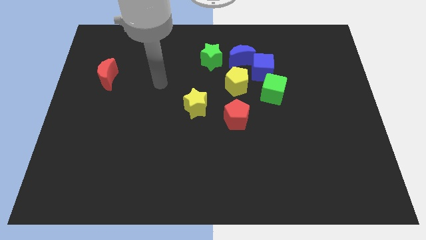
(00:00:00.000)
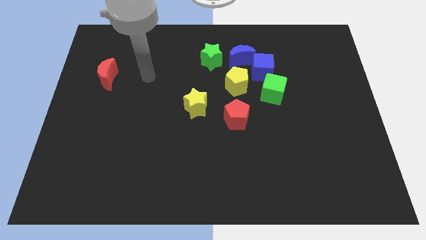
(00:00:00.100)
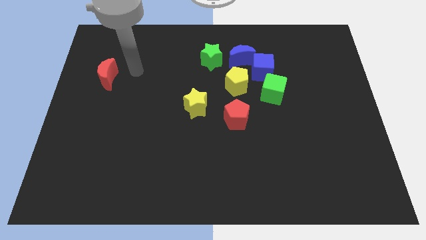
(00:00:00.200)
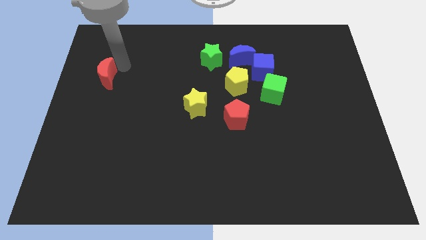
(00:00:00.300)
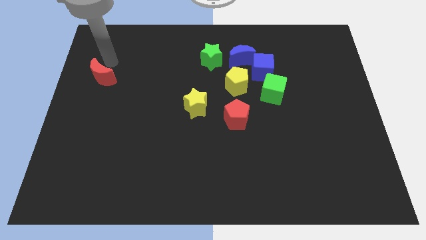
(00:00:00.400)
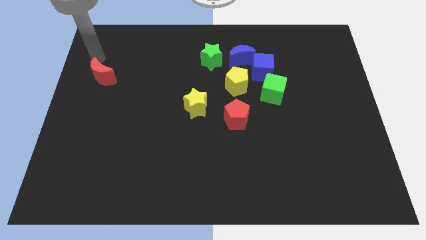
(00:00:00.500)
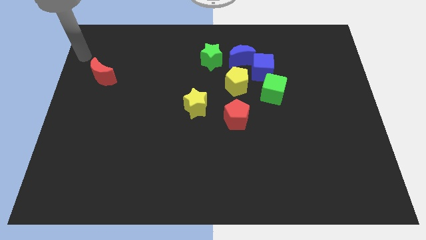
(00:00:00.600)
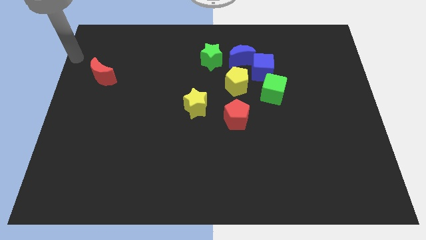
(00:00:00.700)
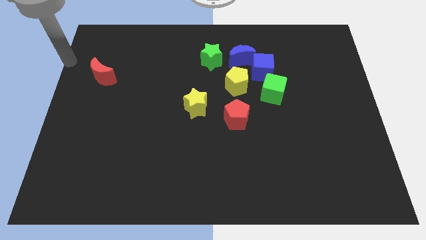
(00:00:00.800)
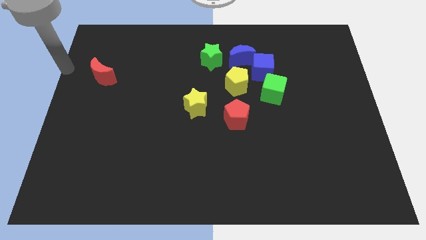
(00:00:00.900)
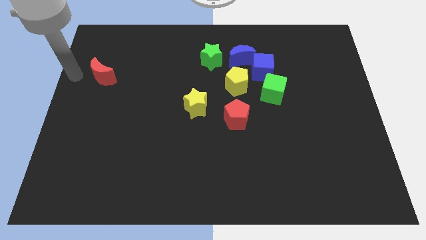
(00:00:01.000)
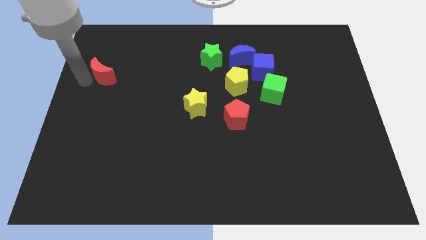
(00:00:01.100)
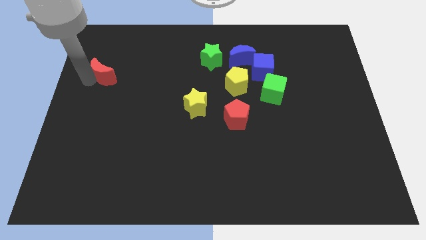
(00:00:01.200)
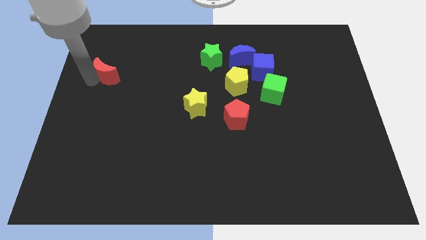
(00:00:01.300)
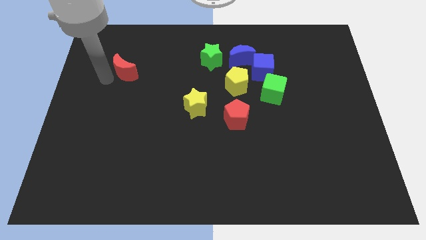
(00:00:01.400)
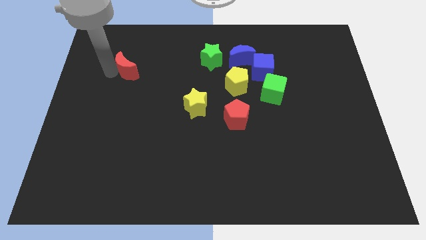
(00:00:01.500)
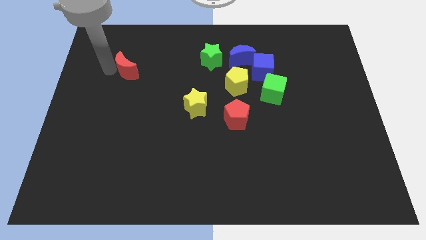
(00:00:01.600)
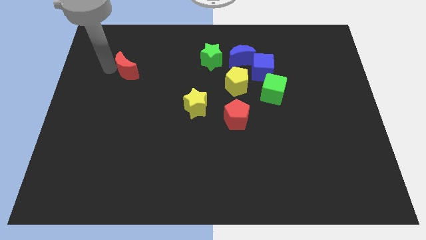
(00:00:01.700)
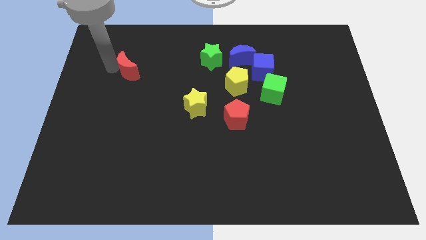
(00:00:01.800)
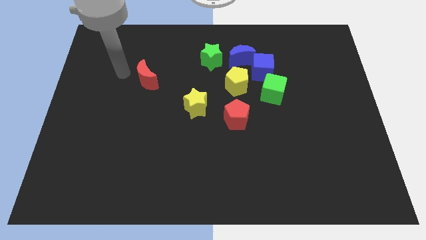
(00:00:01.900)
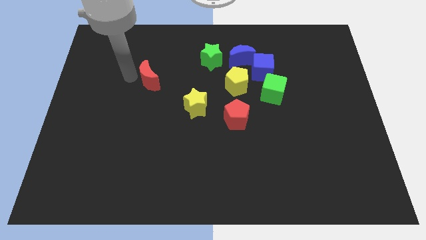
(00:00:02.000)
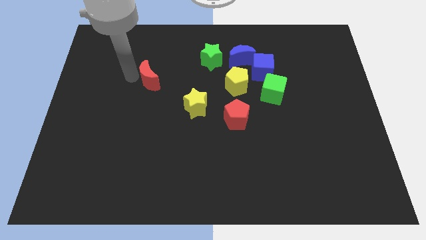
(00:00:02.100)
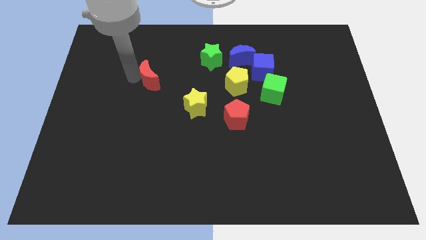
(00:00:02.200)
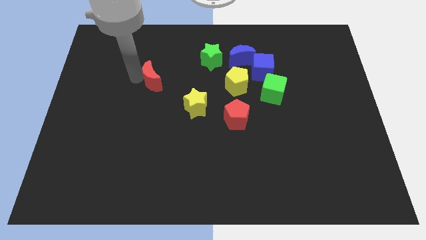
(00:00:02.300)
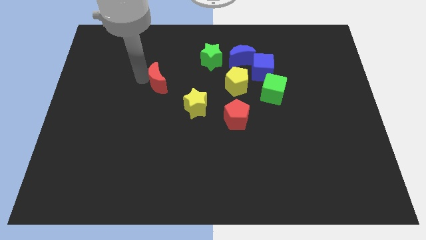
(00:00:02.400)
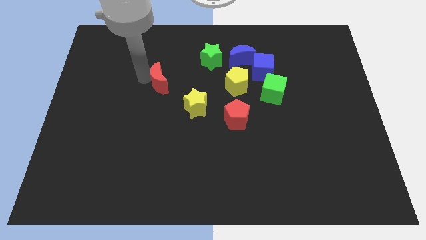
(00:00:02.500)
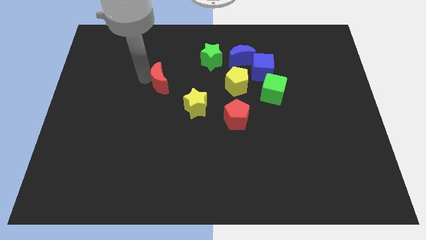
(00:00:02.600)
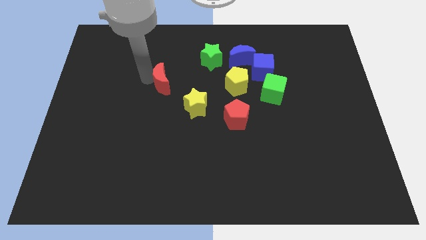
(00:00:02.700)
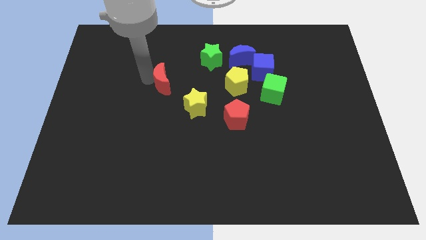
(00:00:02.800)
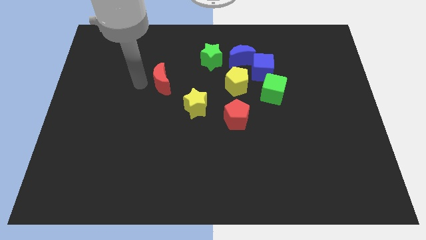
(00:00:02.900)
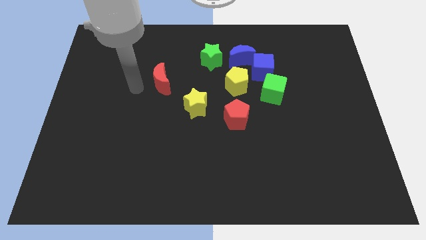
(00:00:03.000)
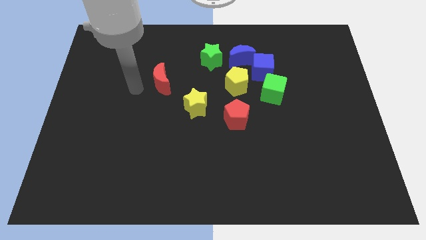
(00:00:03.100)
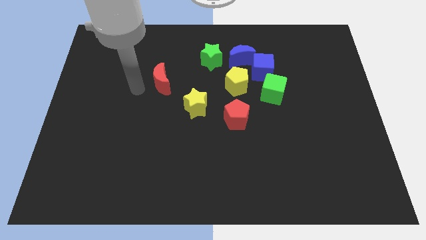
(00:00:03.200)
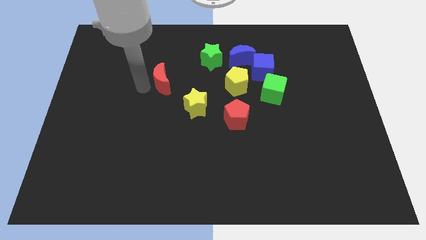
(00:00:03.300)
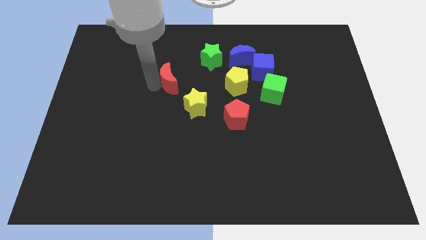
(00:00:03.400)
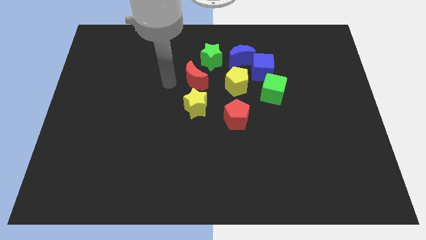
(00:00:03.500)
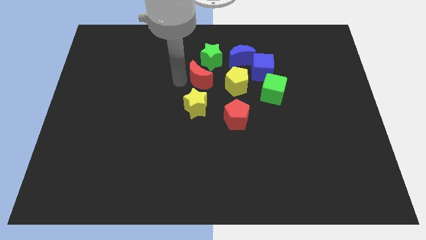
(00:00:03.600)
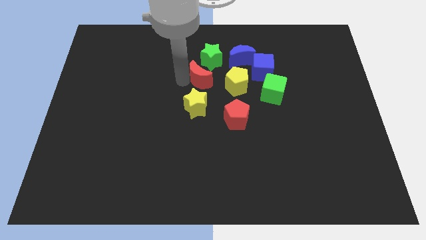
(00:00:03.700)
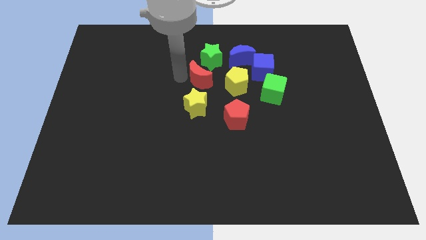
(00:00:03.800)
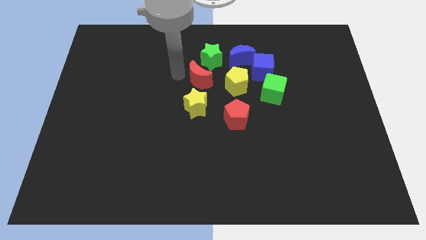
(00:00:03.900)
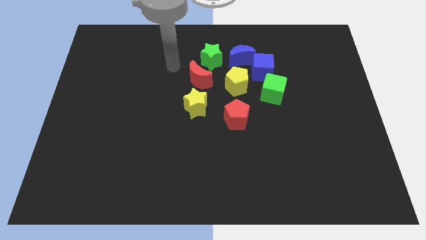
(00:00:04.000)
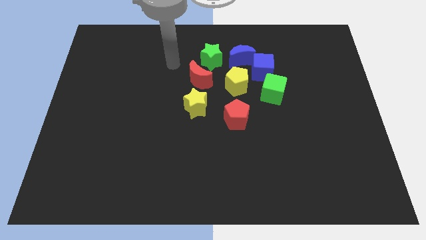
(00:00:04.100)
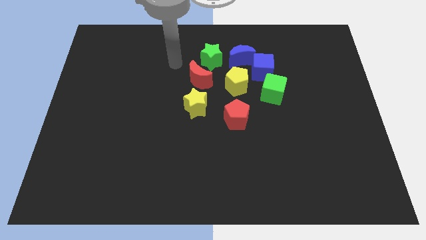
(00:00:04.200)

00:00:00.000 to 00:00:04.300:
push the red moon to the bottom side of the green star

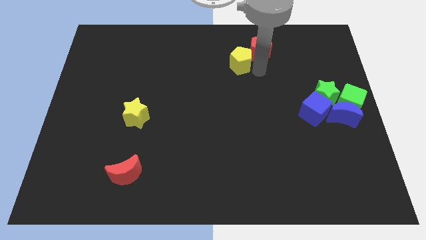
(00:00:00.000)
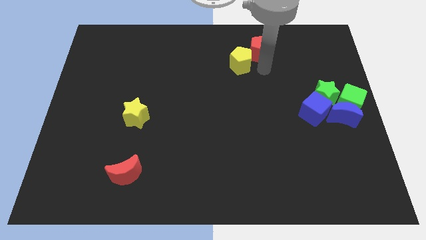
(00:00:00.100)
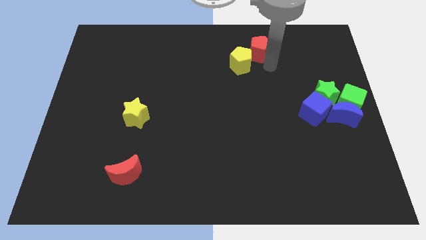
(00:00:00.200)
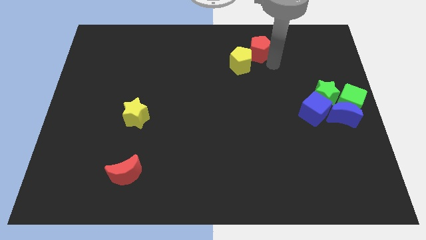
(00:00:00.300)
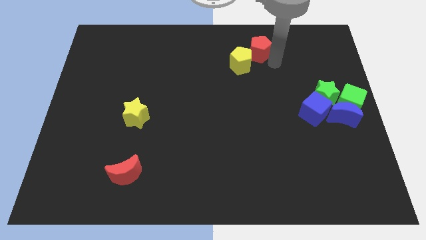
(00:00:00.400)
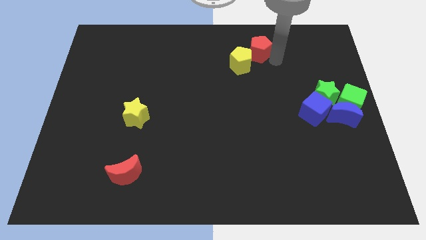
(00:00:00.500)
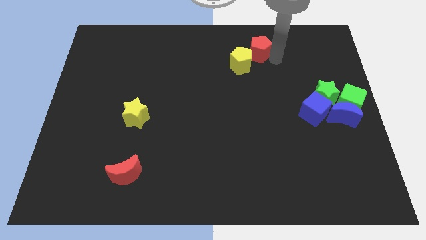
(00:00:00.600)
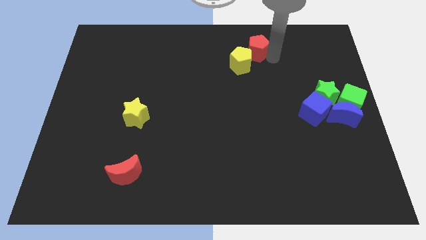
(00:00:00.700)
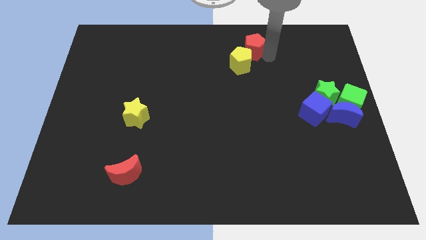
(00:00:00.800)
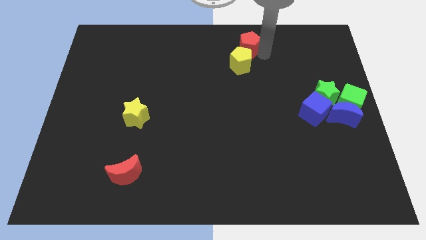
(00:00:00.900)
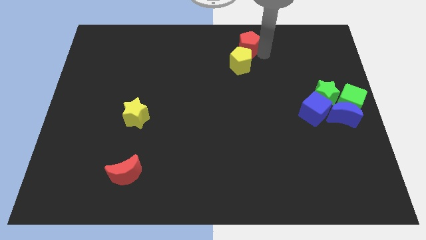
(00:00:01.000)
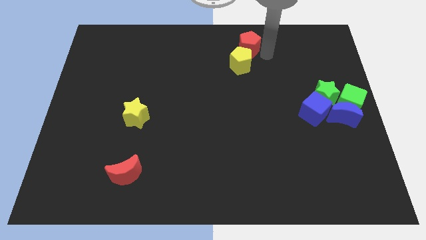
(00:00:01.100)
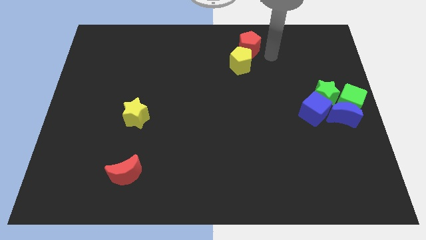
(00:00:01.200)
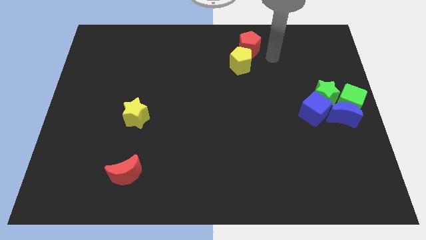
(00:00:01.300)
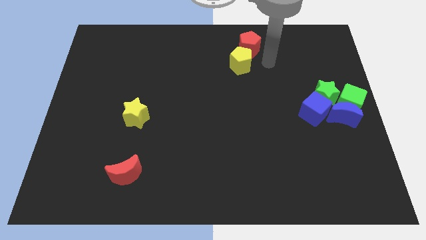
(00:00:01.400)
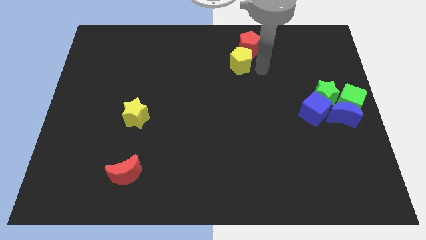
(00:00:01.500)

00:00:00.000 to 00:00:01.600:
slightly push the red pentagon to the top side of the yellow pentagon

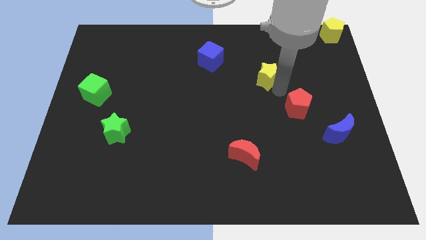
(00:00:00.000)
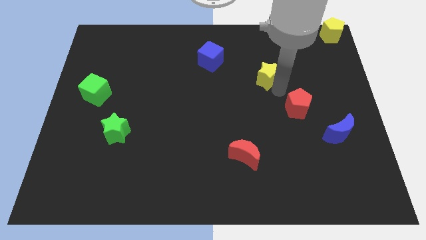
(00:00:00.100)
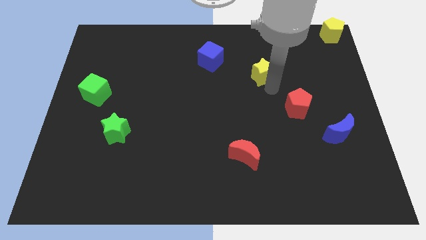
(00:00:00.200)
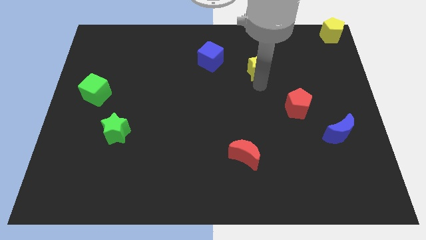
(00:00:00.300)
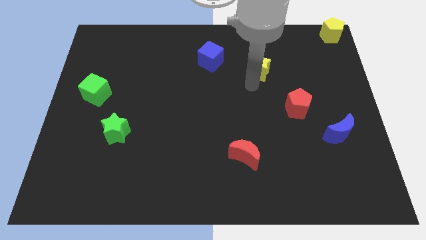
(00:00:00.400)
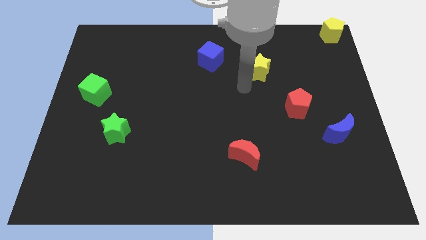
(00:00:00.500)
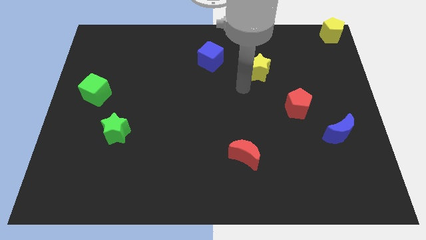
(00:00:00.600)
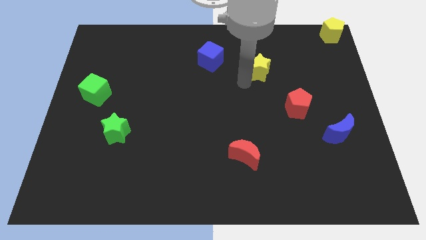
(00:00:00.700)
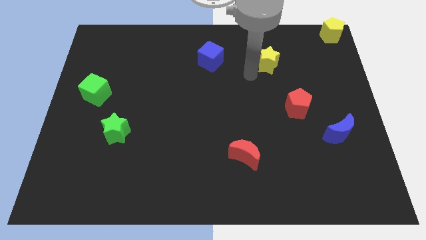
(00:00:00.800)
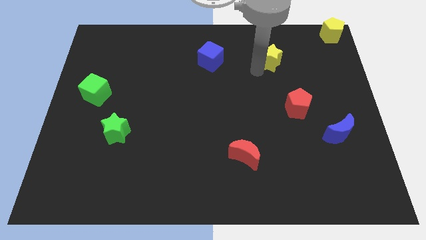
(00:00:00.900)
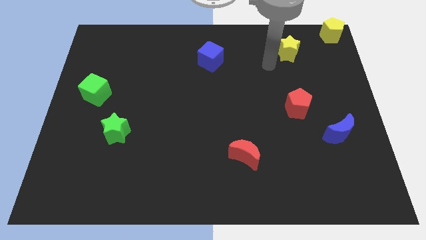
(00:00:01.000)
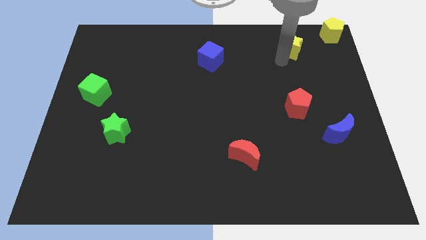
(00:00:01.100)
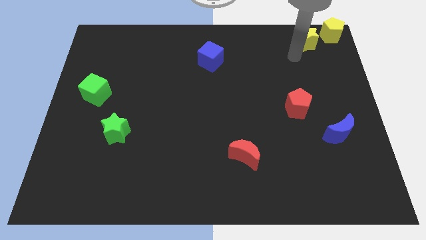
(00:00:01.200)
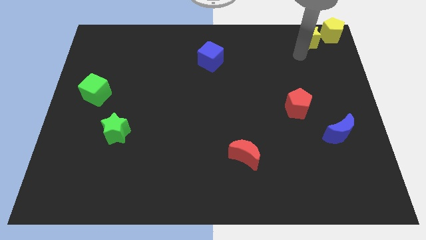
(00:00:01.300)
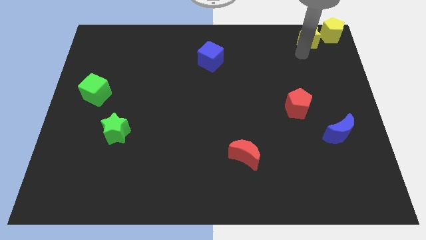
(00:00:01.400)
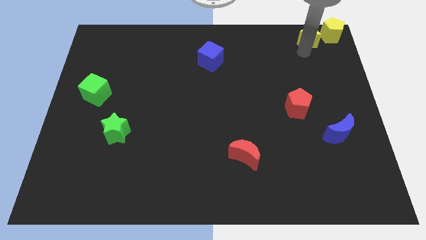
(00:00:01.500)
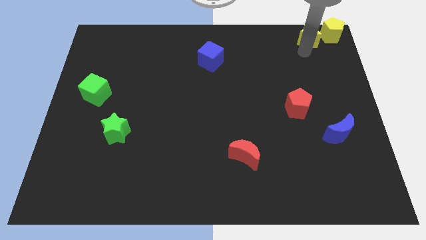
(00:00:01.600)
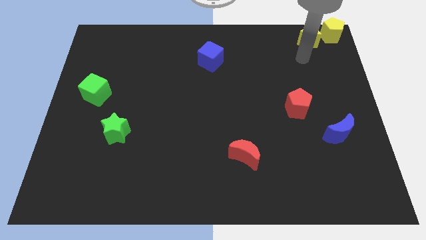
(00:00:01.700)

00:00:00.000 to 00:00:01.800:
move the yellow star towards the yellow pentagon

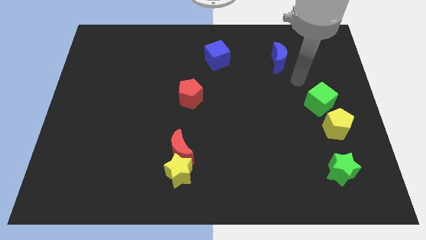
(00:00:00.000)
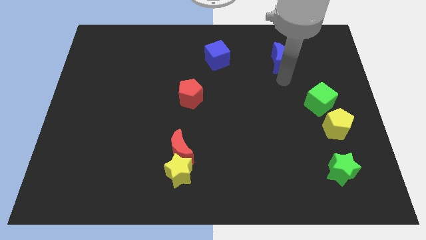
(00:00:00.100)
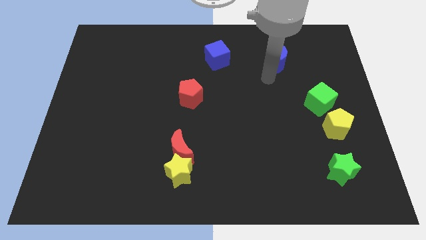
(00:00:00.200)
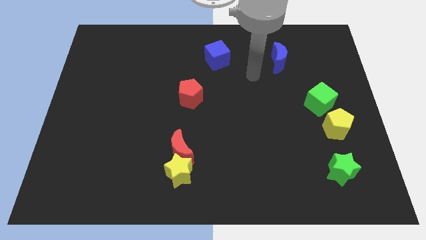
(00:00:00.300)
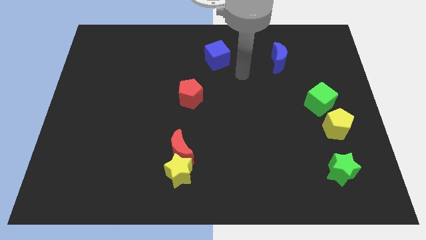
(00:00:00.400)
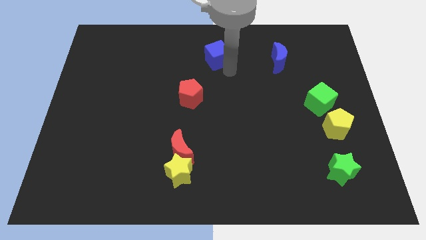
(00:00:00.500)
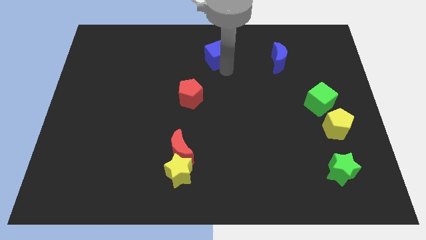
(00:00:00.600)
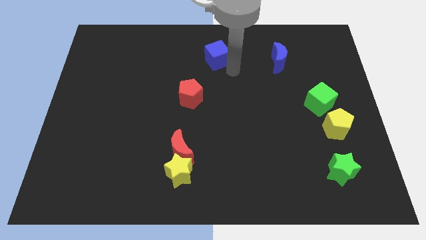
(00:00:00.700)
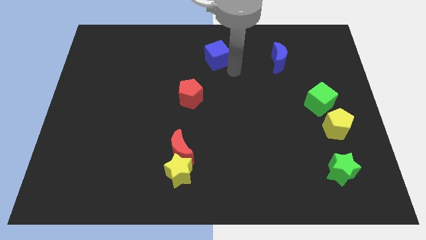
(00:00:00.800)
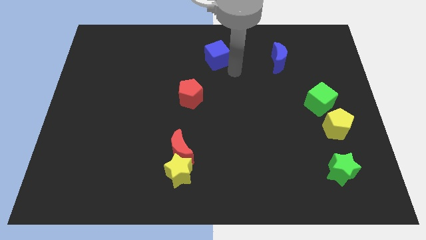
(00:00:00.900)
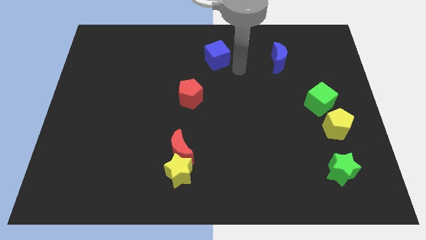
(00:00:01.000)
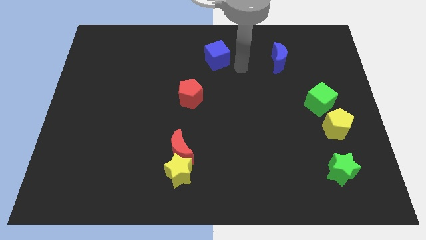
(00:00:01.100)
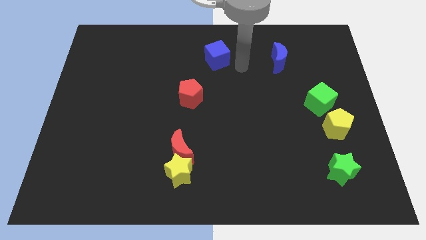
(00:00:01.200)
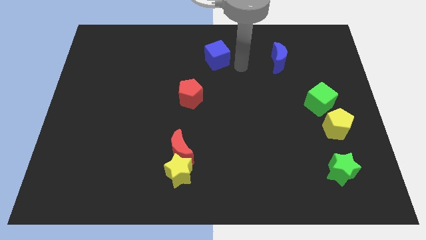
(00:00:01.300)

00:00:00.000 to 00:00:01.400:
place your arm near the blue cube
